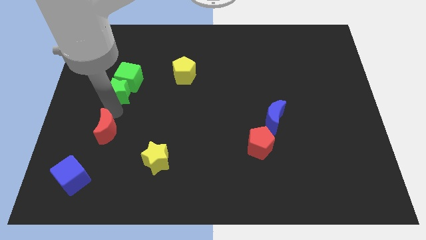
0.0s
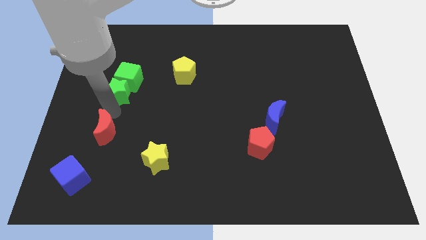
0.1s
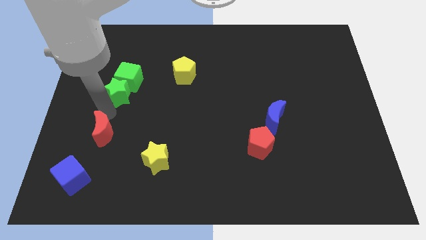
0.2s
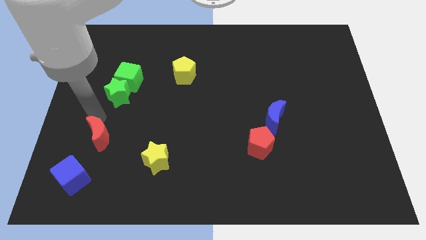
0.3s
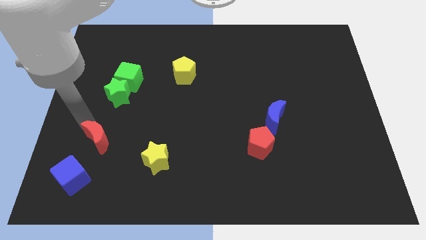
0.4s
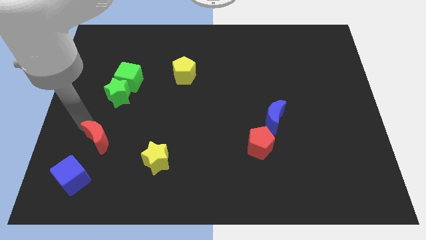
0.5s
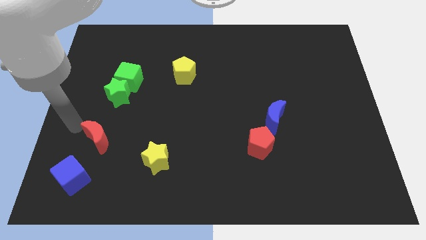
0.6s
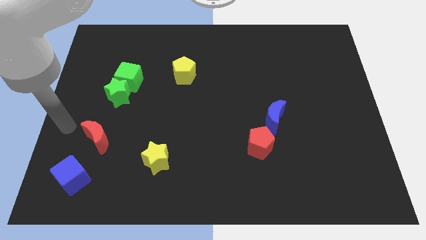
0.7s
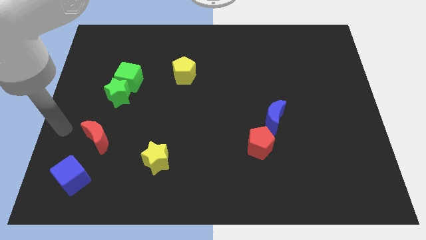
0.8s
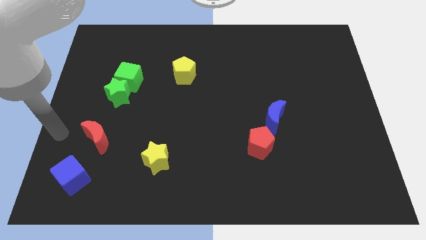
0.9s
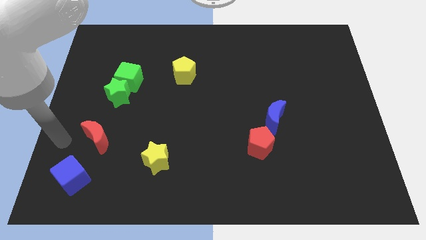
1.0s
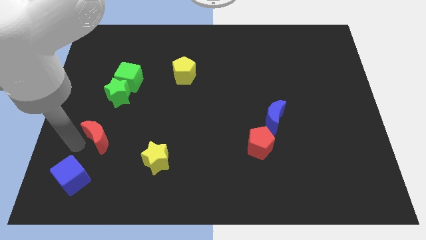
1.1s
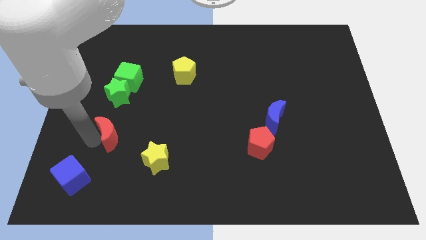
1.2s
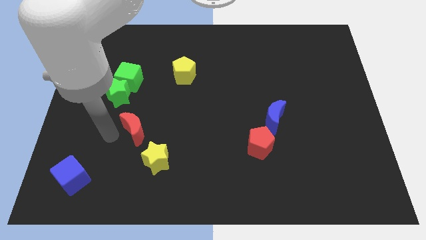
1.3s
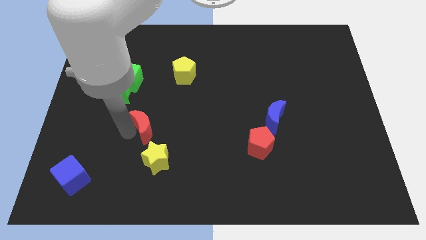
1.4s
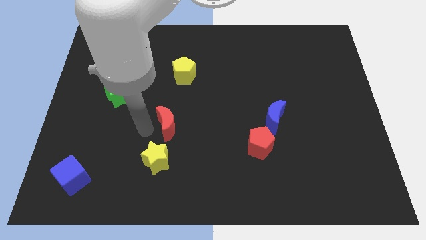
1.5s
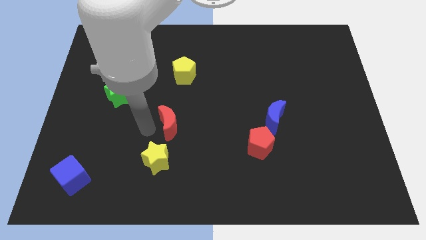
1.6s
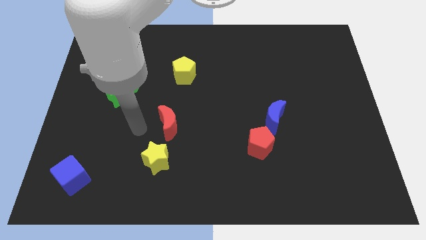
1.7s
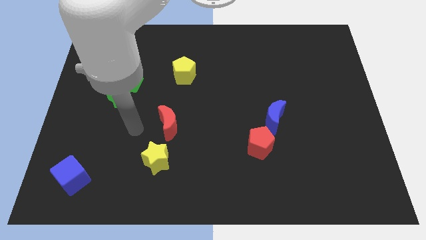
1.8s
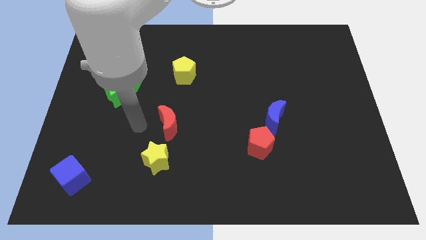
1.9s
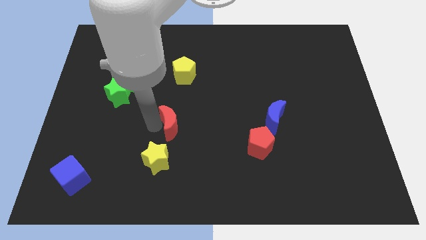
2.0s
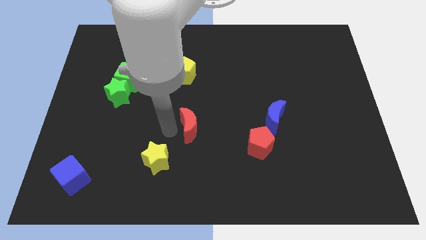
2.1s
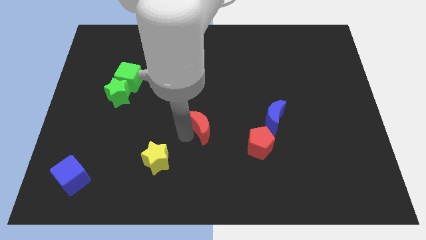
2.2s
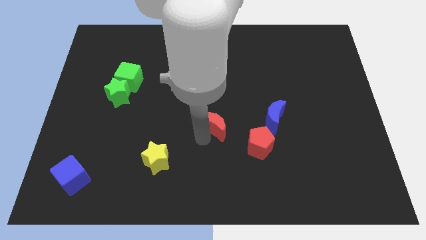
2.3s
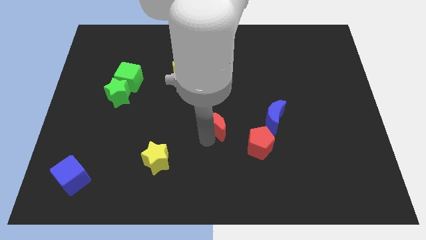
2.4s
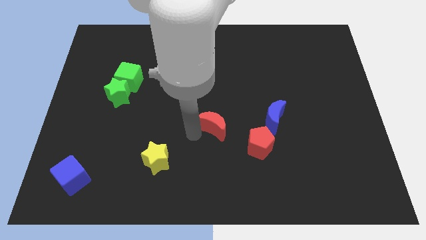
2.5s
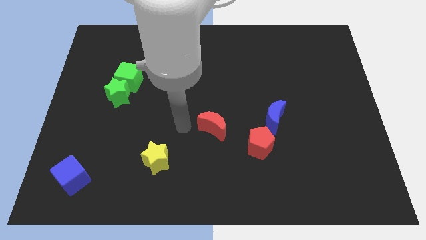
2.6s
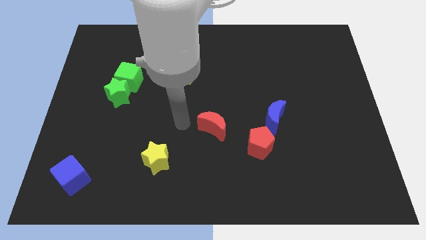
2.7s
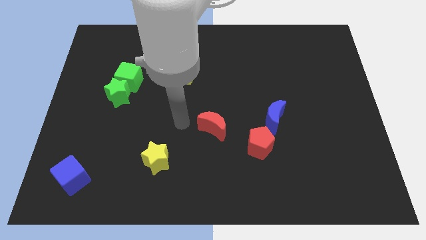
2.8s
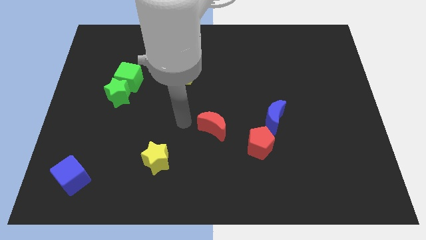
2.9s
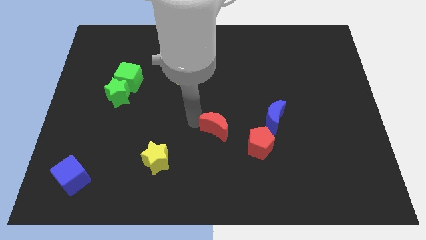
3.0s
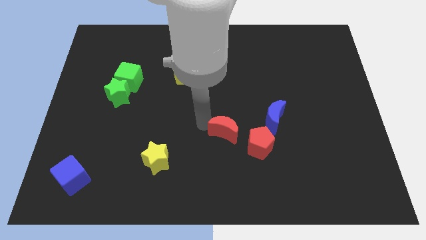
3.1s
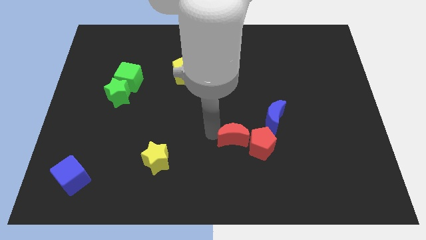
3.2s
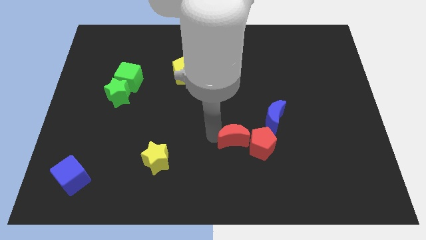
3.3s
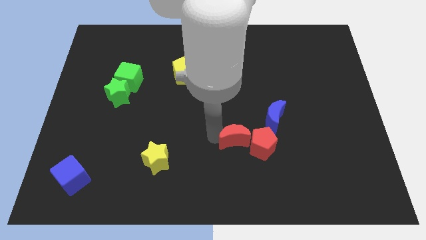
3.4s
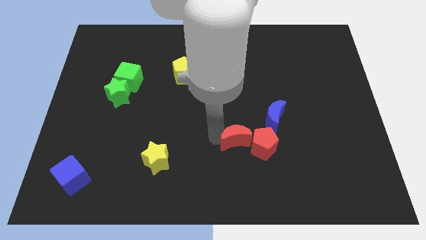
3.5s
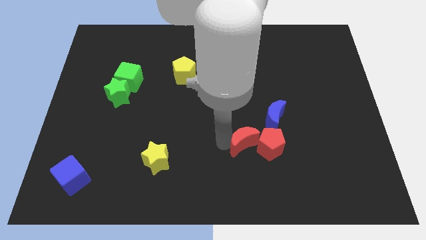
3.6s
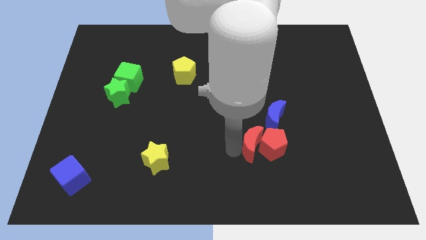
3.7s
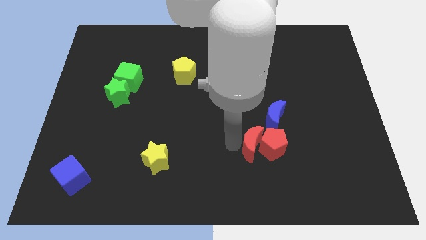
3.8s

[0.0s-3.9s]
move the red crescent into the left of the red pentagon

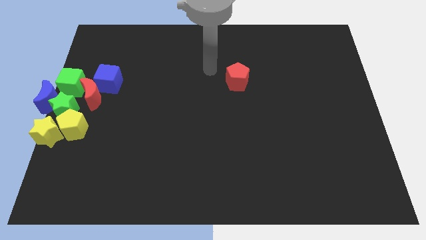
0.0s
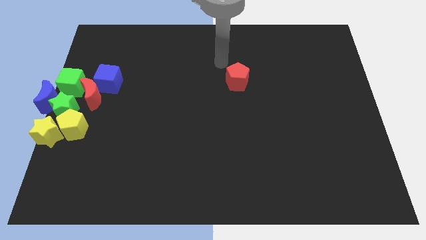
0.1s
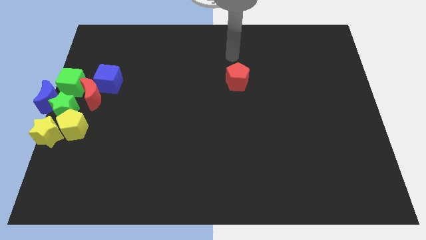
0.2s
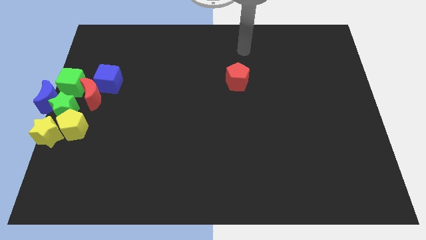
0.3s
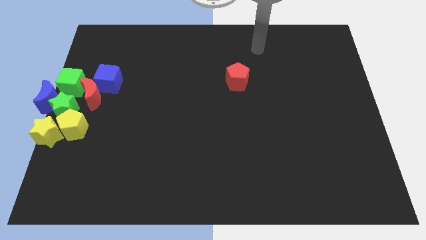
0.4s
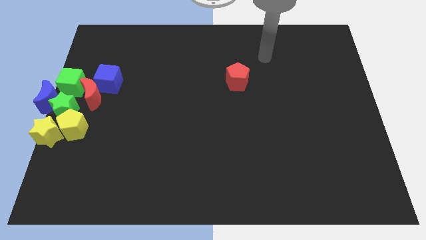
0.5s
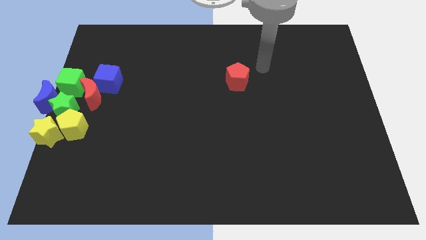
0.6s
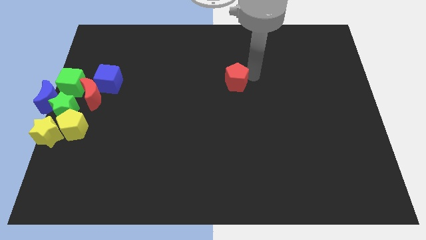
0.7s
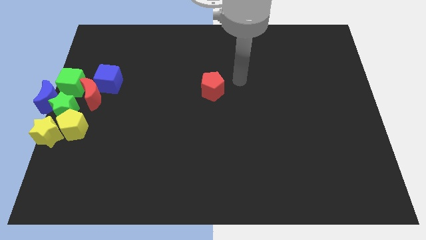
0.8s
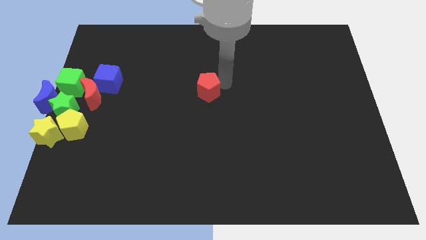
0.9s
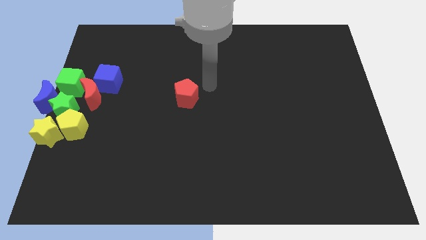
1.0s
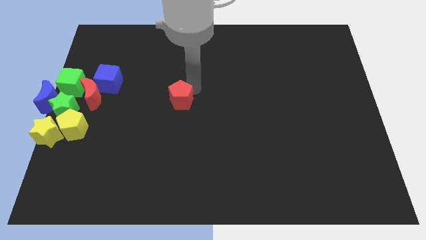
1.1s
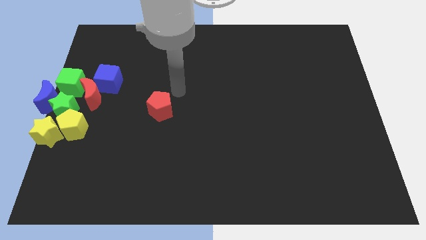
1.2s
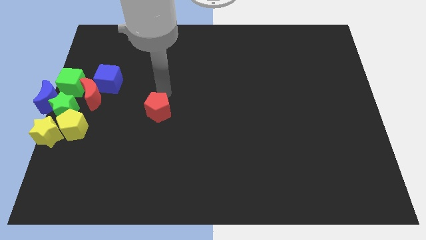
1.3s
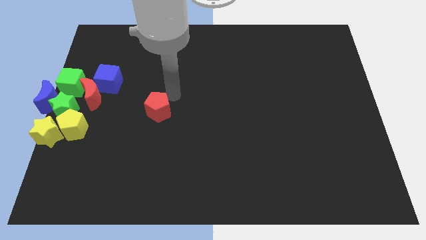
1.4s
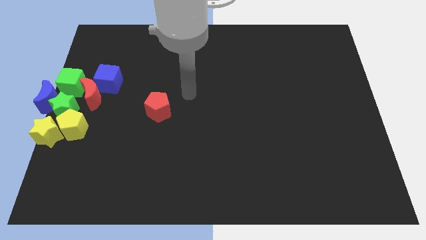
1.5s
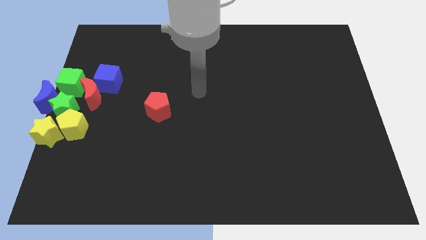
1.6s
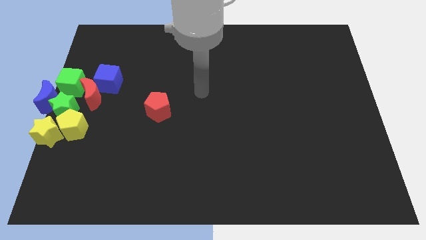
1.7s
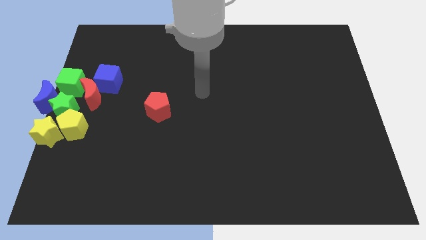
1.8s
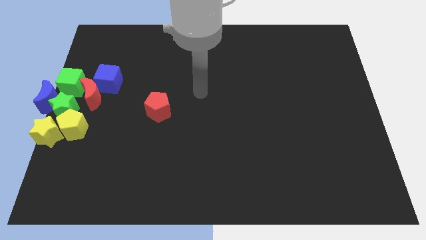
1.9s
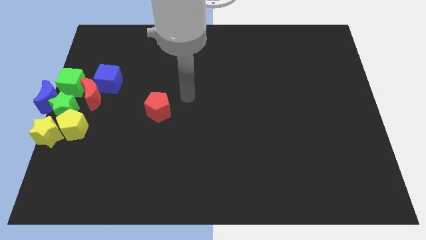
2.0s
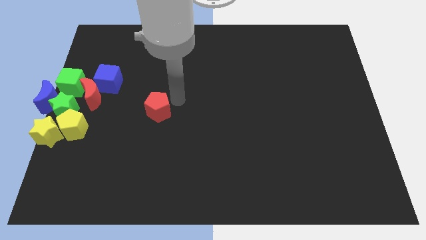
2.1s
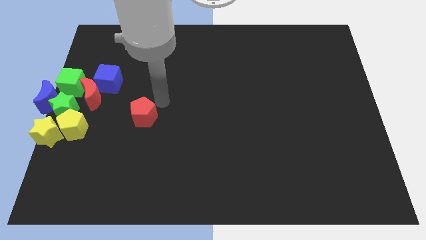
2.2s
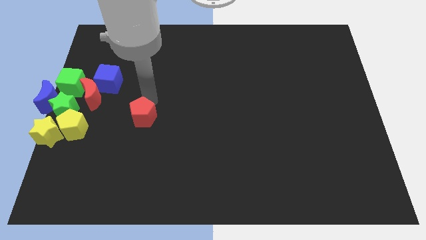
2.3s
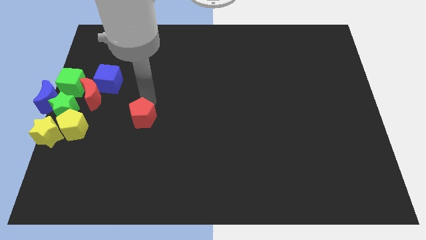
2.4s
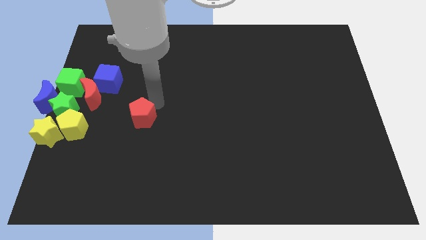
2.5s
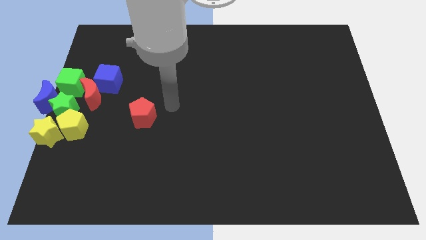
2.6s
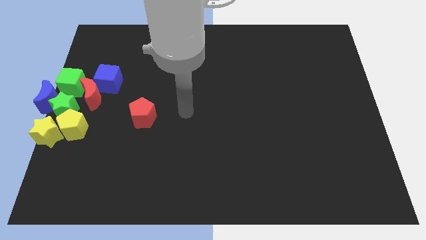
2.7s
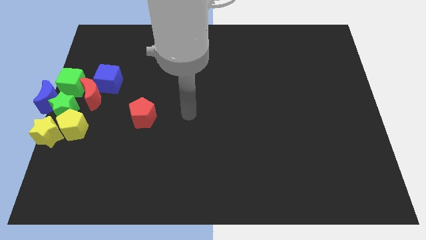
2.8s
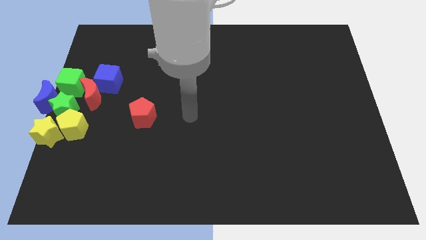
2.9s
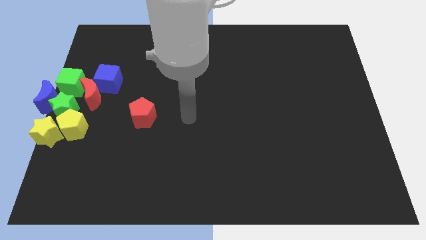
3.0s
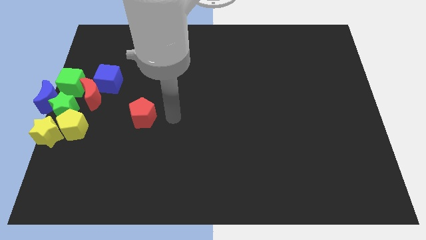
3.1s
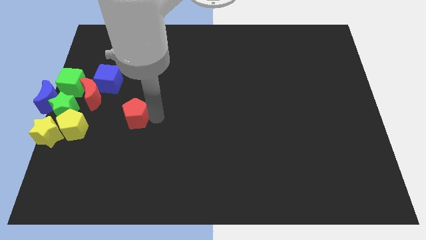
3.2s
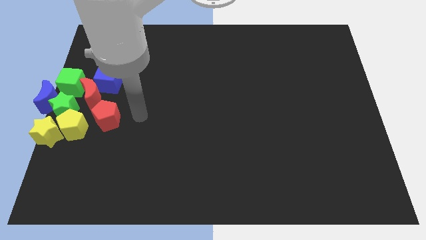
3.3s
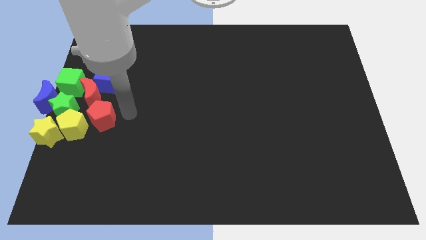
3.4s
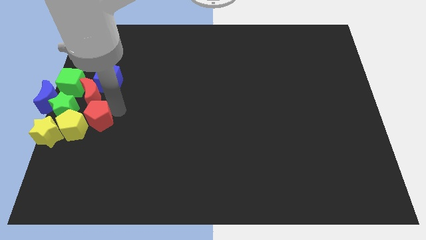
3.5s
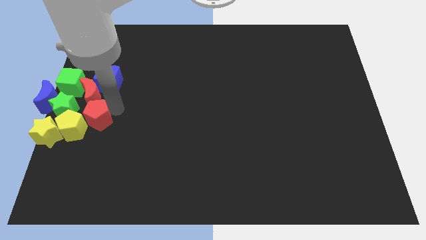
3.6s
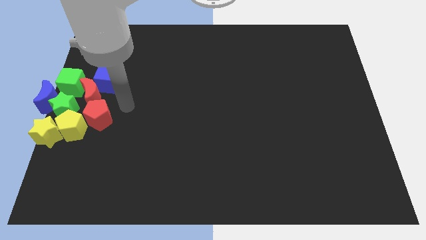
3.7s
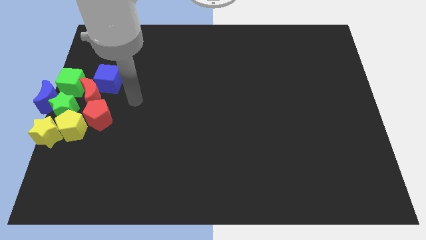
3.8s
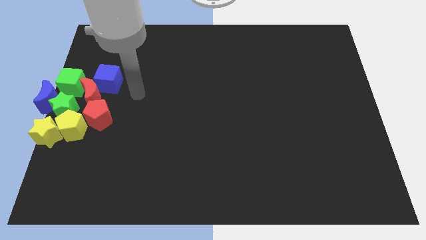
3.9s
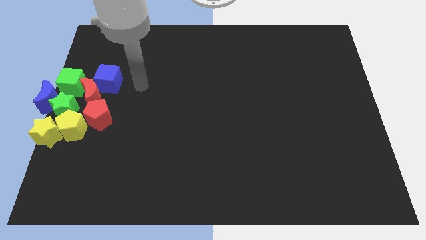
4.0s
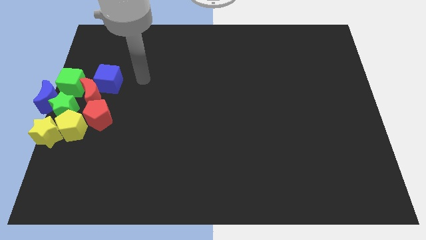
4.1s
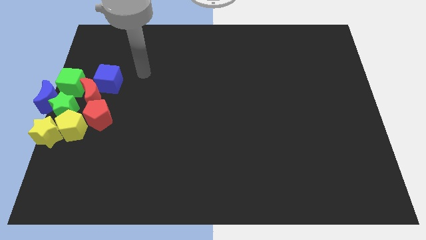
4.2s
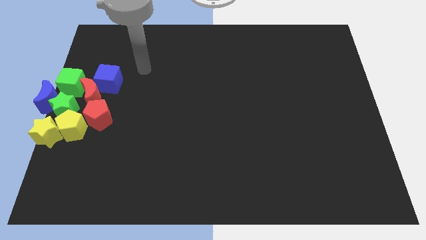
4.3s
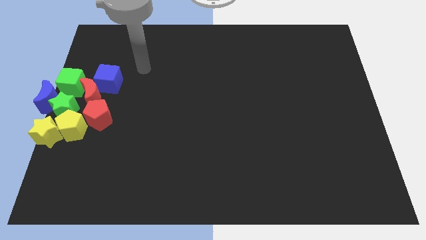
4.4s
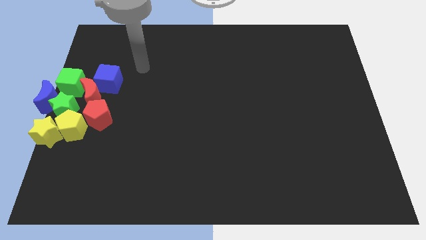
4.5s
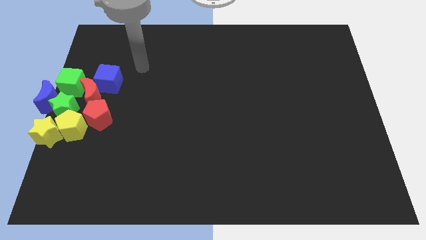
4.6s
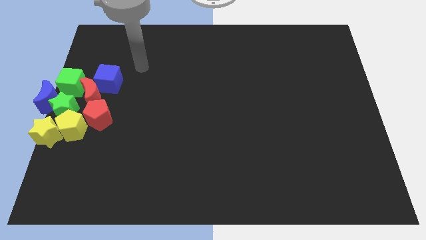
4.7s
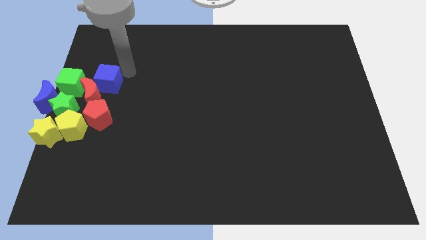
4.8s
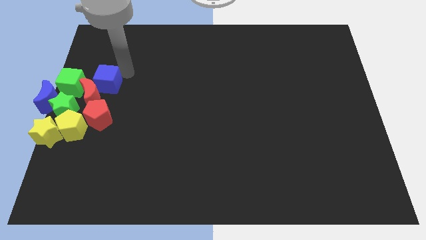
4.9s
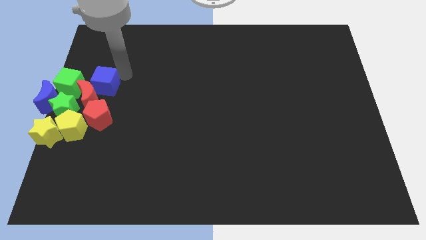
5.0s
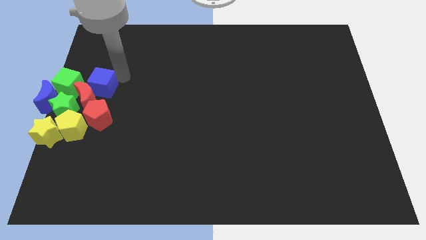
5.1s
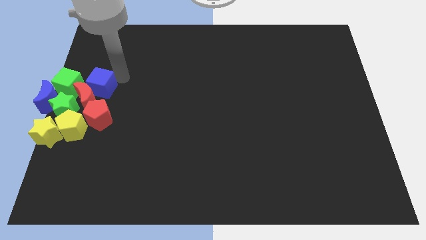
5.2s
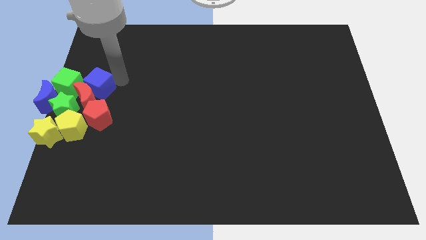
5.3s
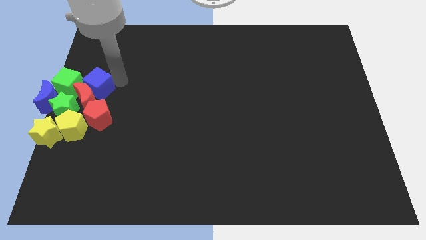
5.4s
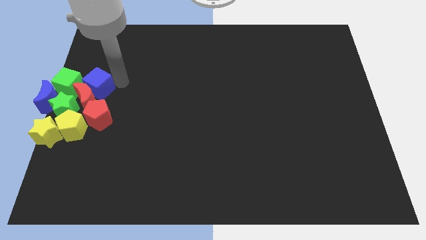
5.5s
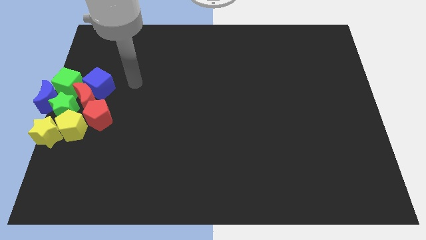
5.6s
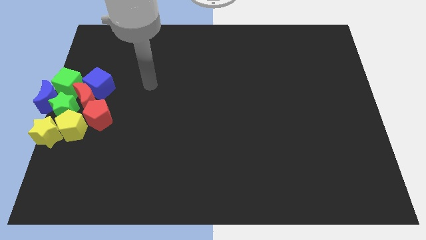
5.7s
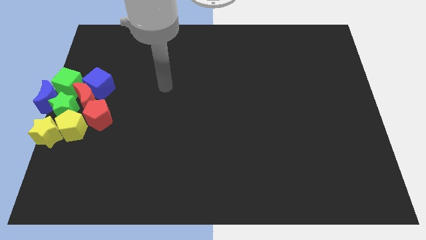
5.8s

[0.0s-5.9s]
slide the red pentagon into the group of blocks
